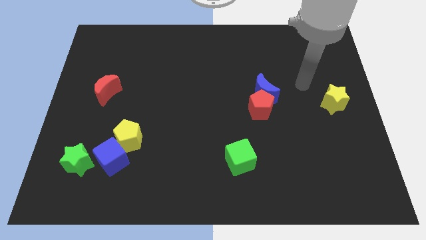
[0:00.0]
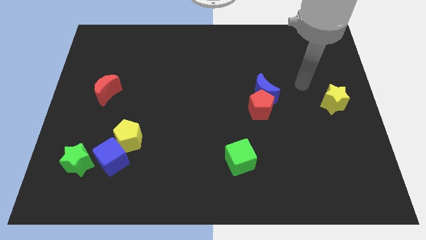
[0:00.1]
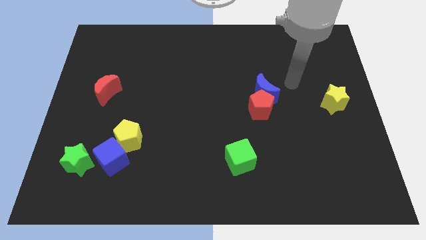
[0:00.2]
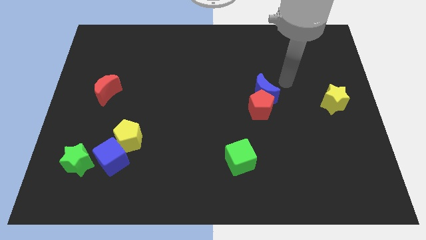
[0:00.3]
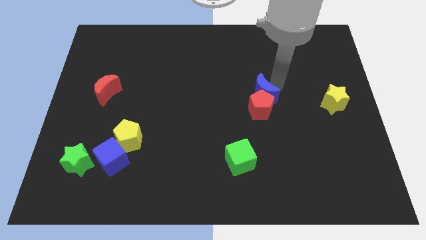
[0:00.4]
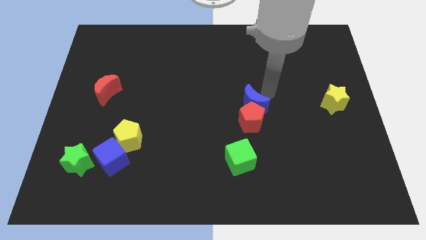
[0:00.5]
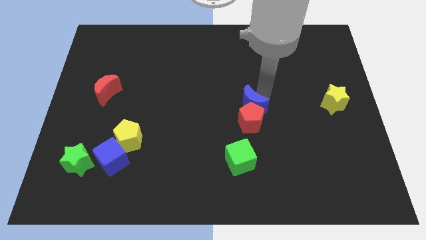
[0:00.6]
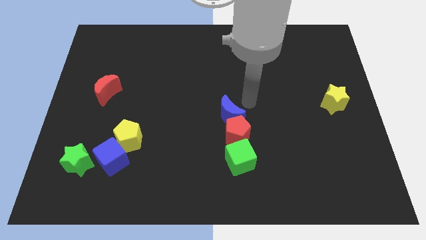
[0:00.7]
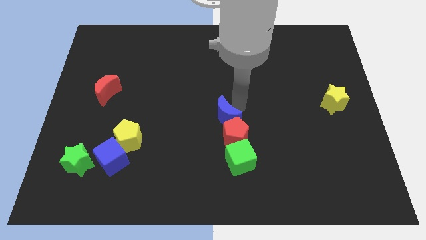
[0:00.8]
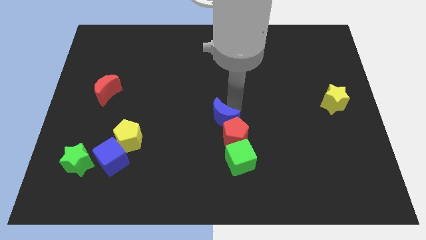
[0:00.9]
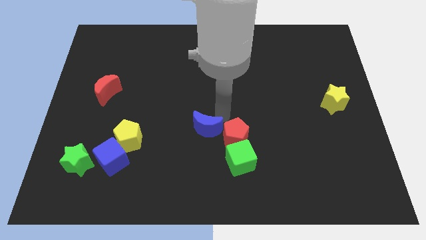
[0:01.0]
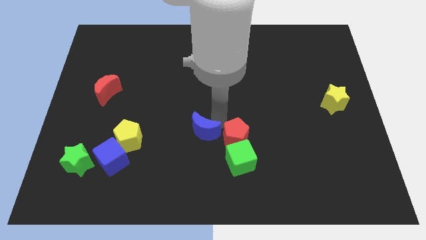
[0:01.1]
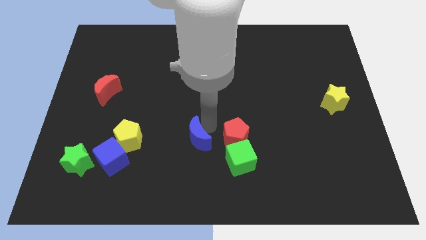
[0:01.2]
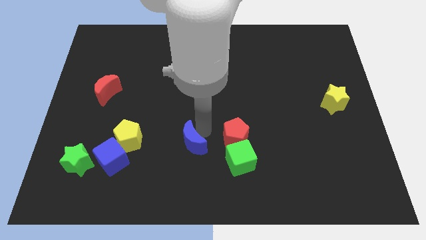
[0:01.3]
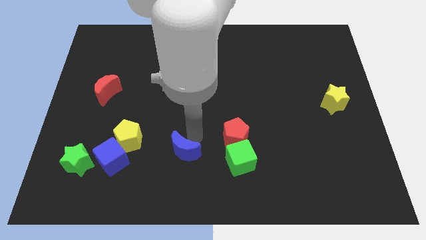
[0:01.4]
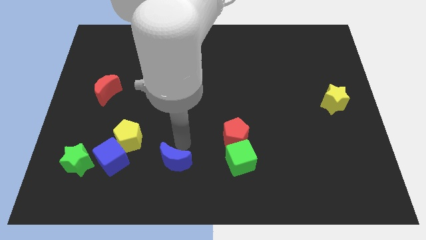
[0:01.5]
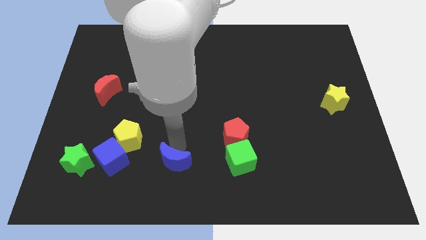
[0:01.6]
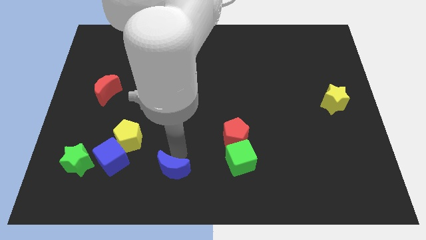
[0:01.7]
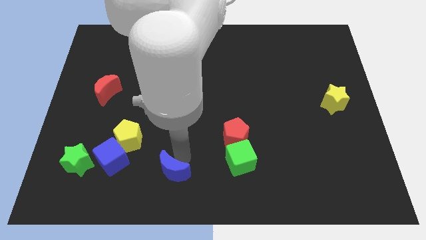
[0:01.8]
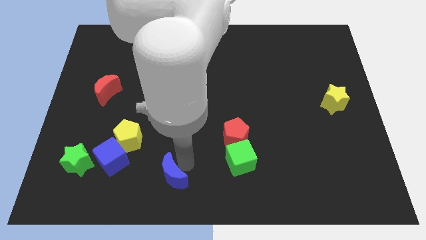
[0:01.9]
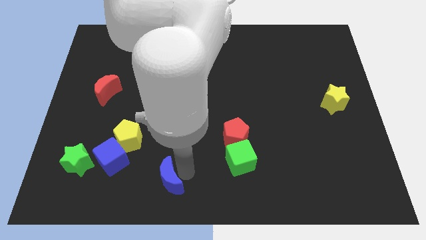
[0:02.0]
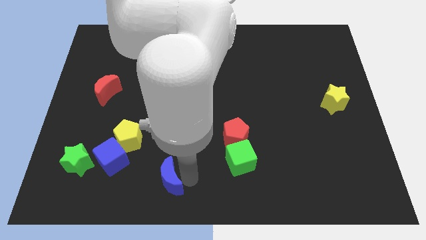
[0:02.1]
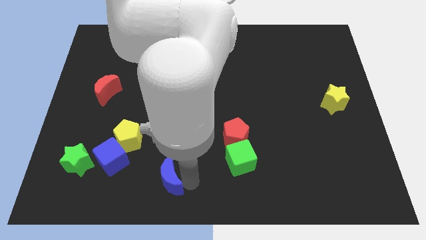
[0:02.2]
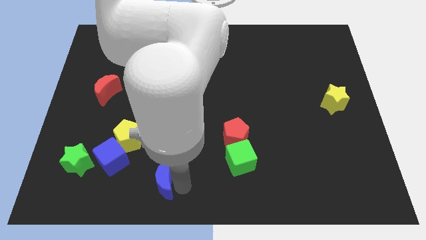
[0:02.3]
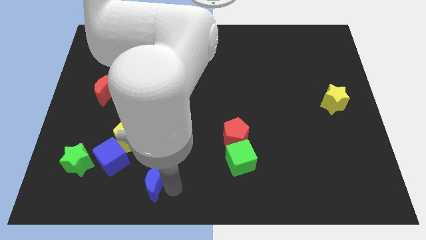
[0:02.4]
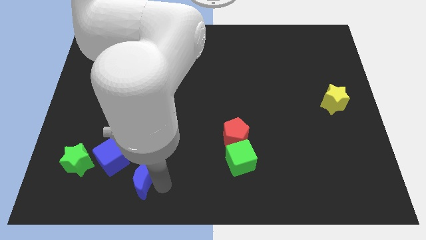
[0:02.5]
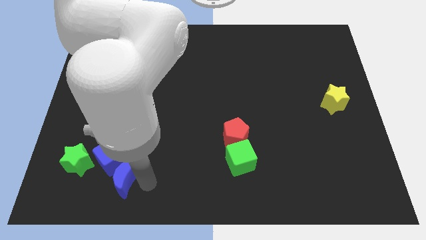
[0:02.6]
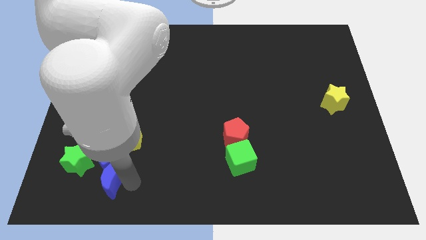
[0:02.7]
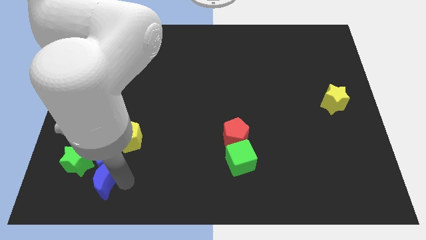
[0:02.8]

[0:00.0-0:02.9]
push the blue moon next to the blue cube

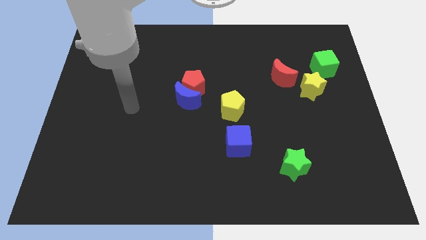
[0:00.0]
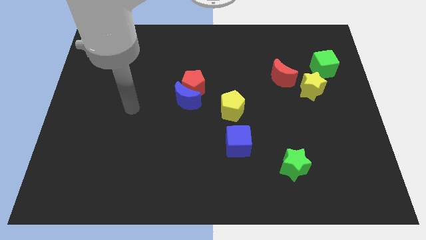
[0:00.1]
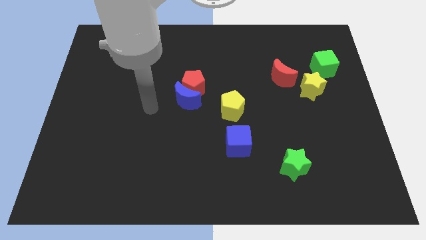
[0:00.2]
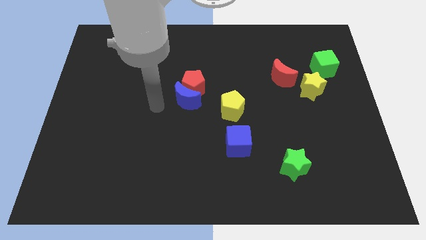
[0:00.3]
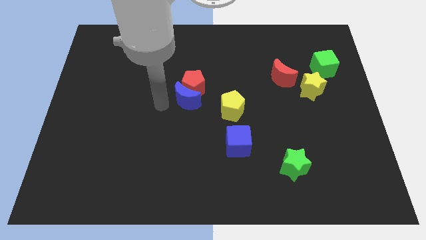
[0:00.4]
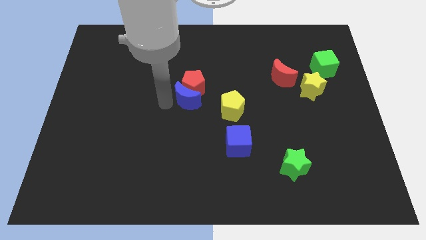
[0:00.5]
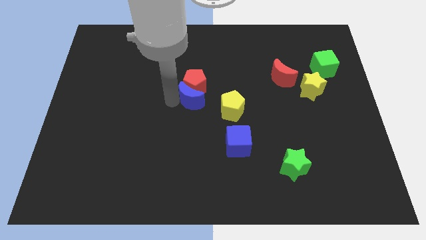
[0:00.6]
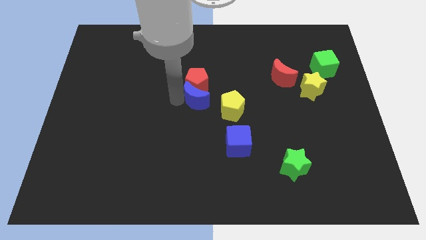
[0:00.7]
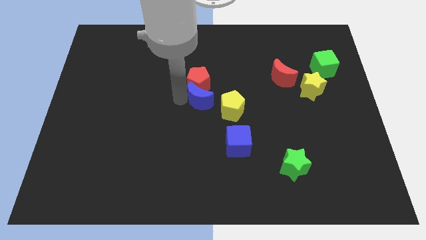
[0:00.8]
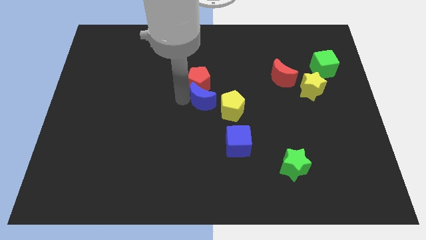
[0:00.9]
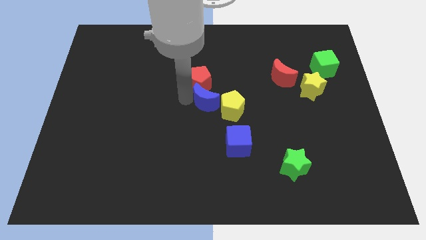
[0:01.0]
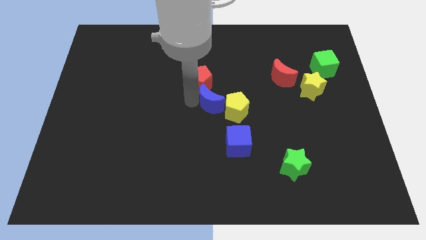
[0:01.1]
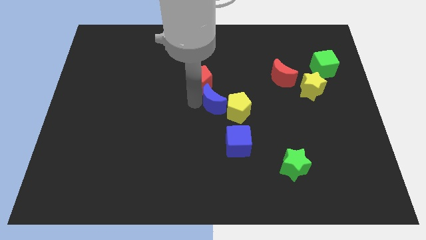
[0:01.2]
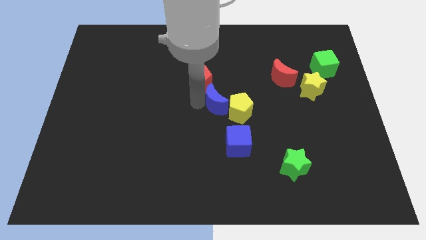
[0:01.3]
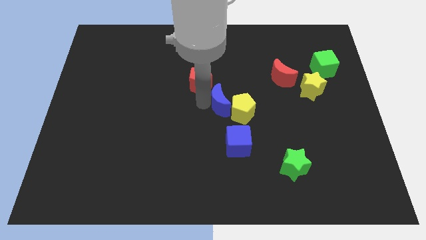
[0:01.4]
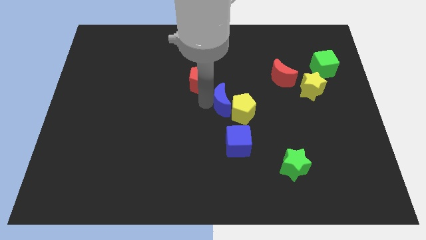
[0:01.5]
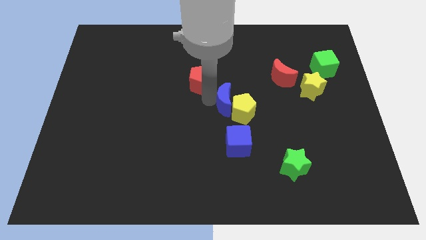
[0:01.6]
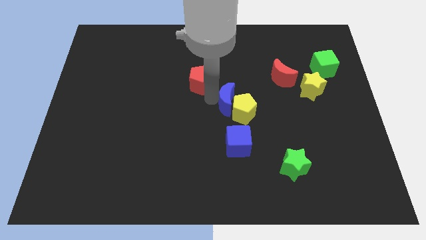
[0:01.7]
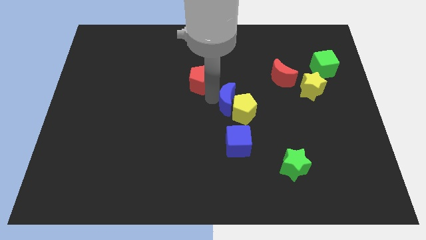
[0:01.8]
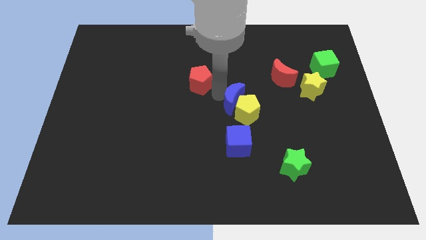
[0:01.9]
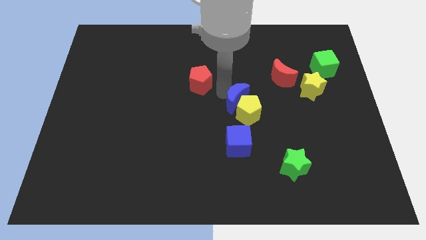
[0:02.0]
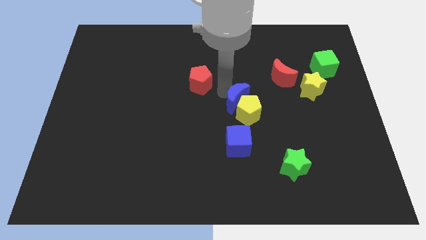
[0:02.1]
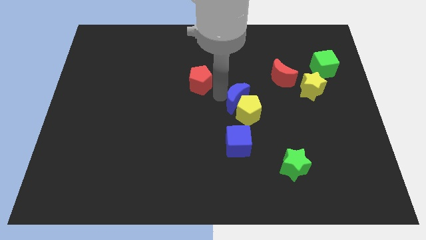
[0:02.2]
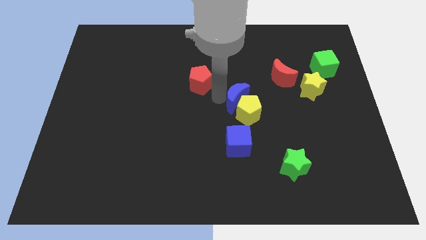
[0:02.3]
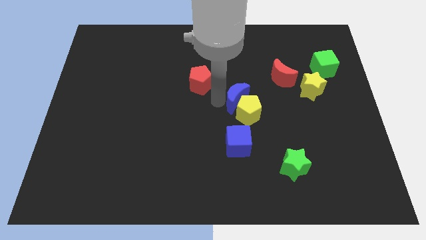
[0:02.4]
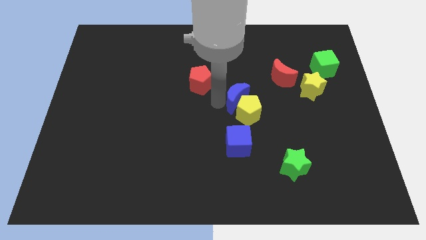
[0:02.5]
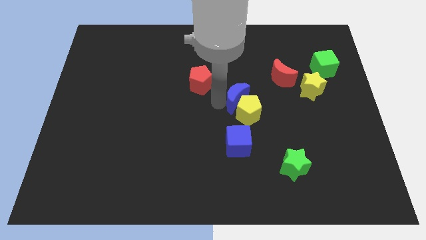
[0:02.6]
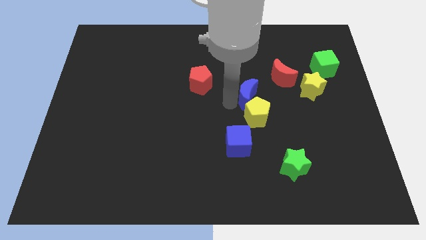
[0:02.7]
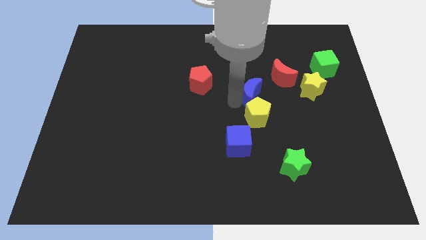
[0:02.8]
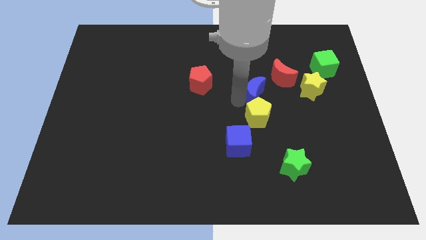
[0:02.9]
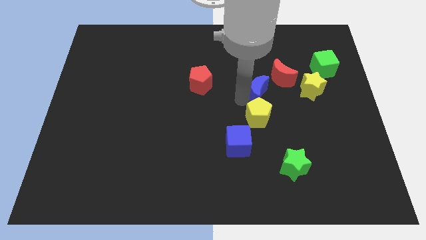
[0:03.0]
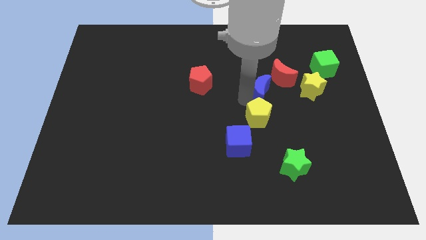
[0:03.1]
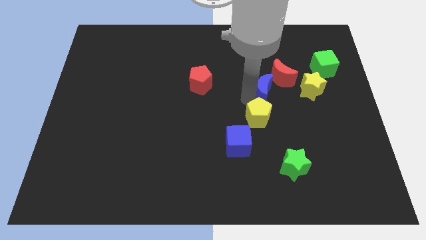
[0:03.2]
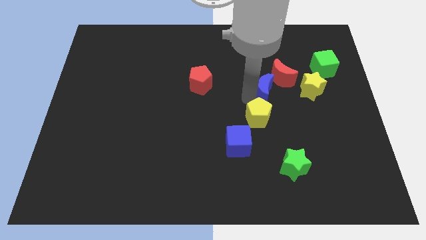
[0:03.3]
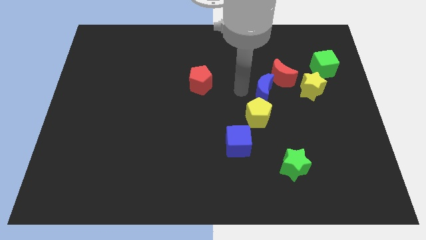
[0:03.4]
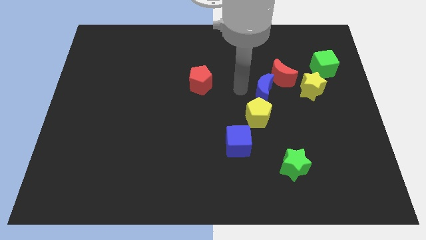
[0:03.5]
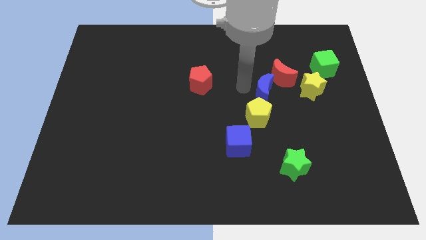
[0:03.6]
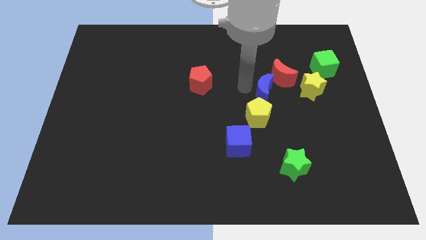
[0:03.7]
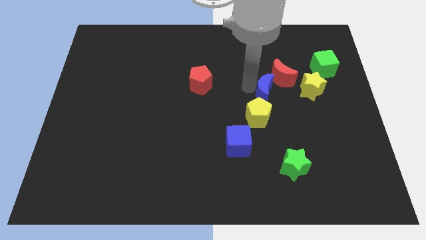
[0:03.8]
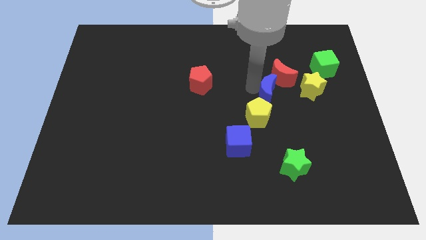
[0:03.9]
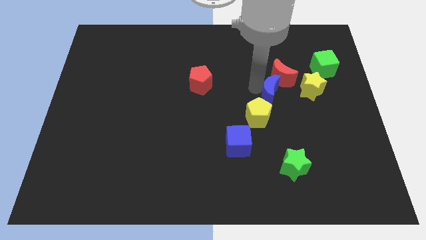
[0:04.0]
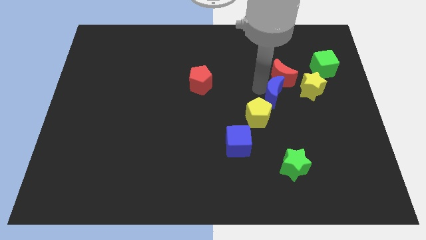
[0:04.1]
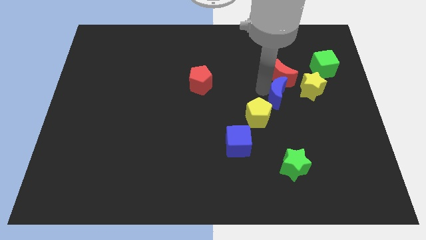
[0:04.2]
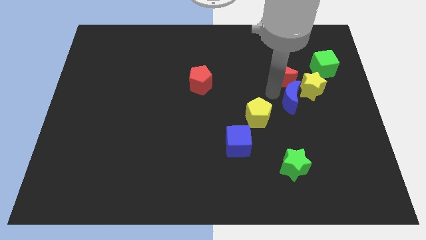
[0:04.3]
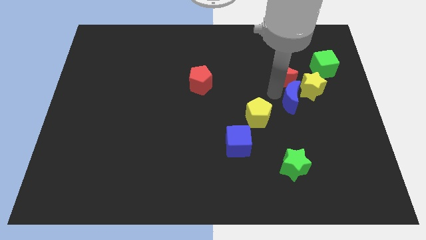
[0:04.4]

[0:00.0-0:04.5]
slide the blue moon close to the yellow star

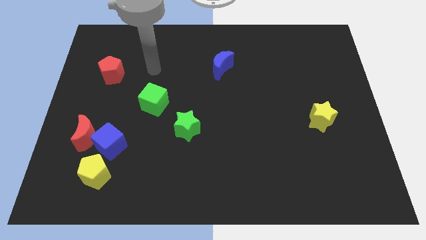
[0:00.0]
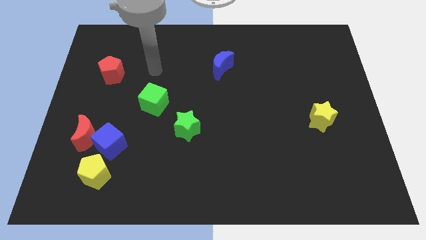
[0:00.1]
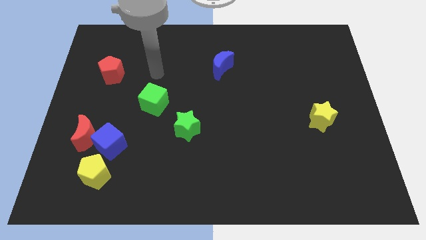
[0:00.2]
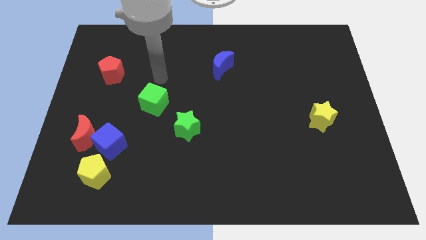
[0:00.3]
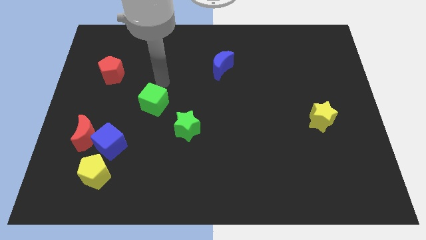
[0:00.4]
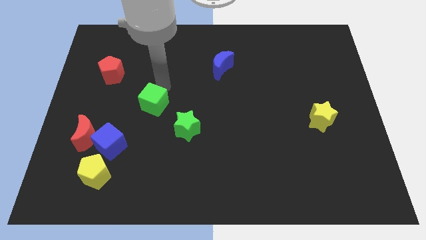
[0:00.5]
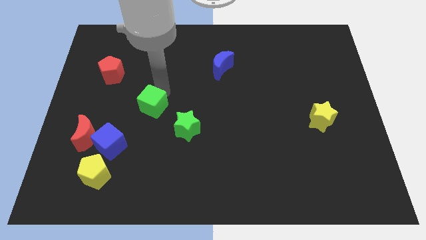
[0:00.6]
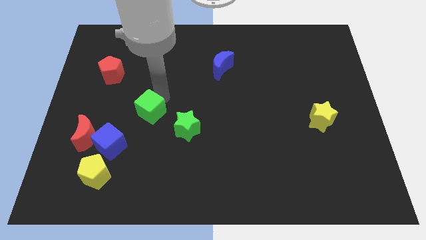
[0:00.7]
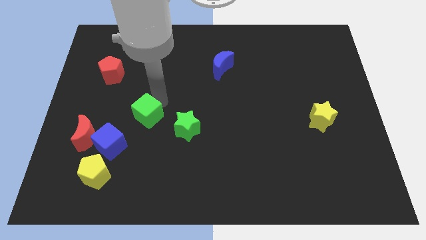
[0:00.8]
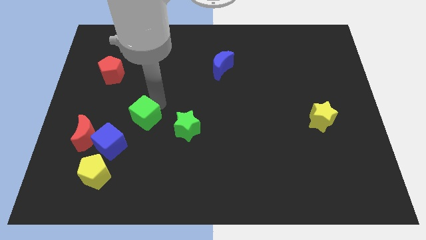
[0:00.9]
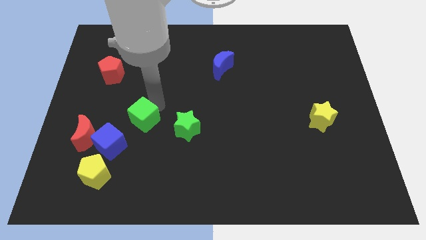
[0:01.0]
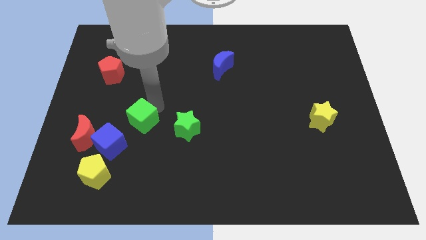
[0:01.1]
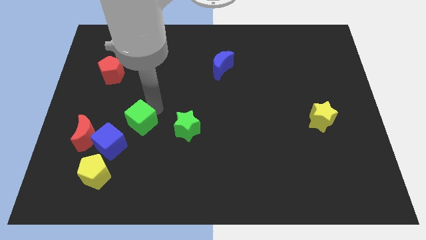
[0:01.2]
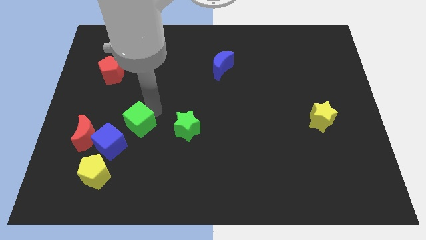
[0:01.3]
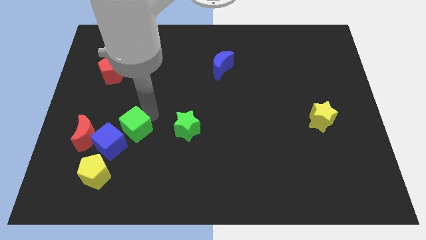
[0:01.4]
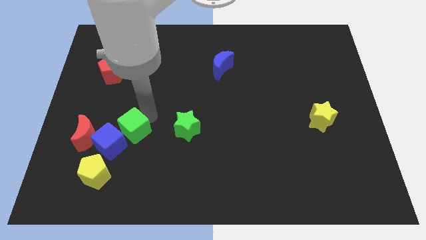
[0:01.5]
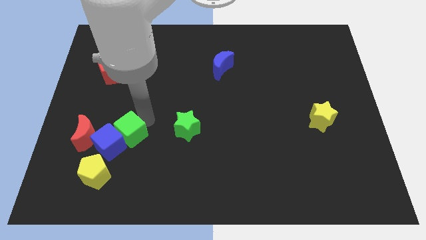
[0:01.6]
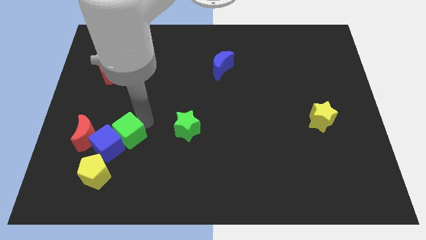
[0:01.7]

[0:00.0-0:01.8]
move the green cube to the blue cube
